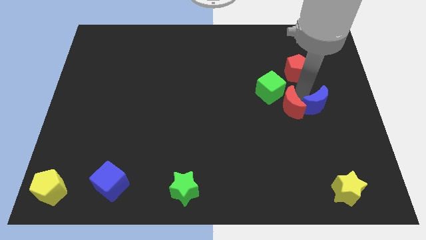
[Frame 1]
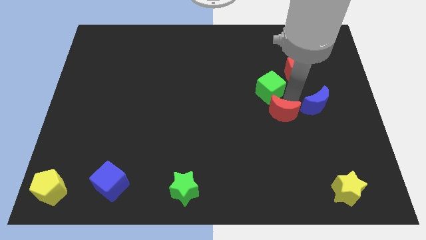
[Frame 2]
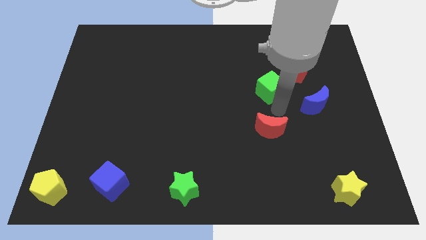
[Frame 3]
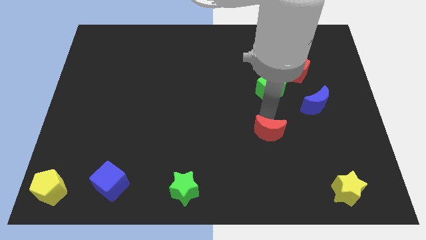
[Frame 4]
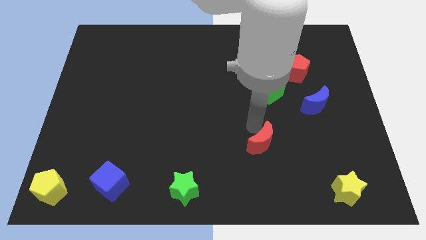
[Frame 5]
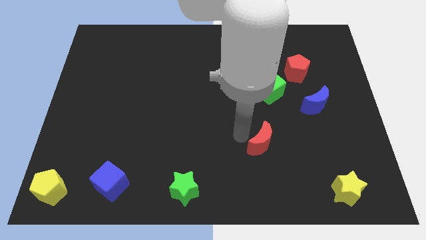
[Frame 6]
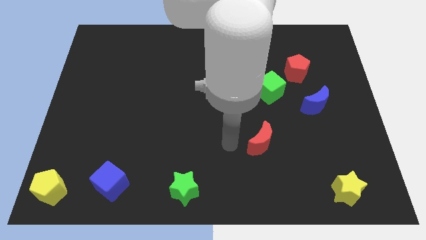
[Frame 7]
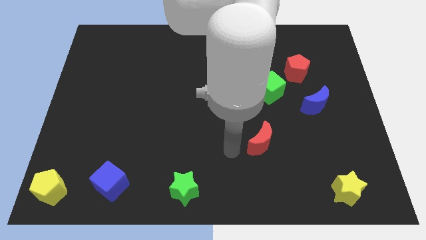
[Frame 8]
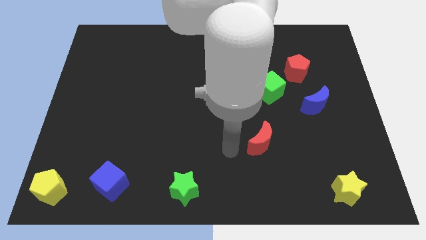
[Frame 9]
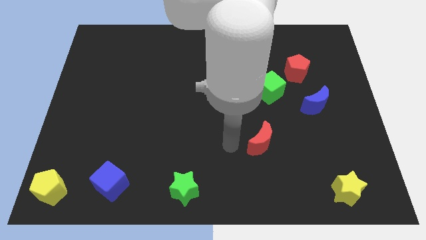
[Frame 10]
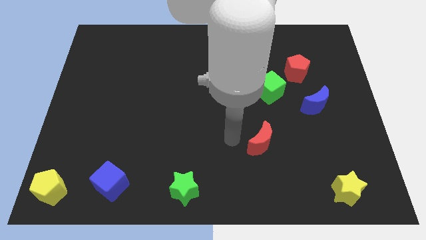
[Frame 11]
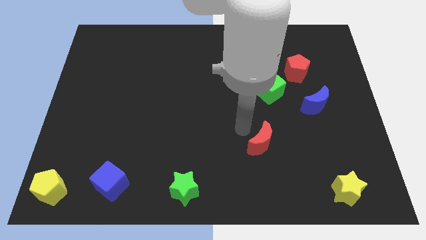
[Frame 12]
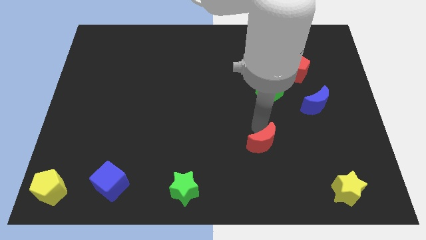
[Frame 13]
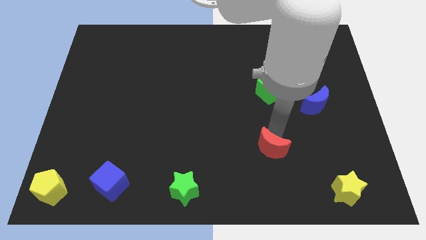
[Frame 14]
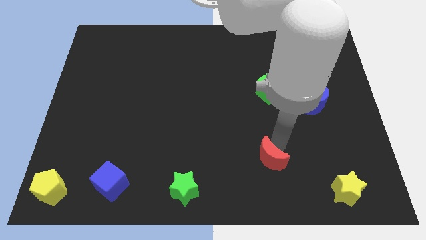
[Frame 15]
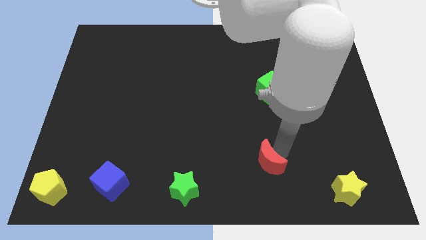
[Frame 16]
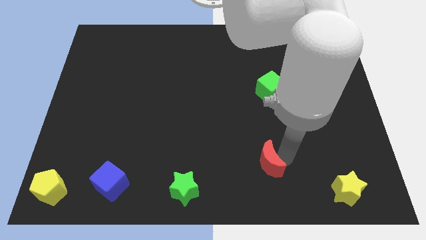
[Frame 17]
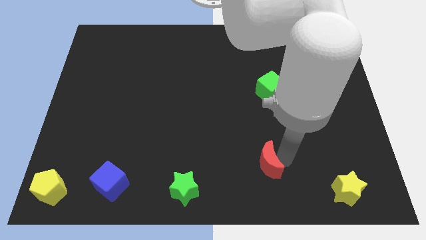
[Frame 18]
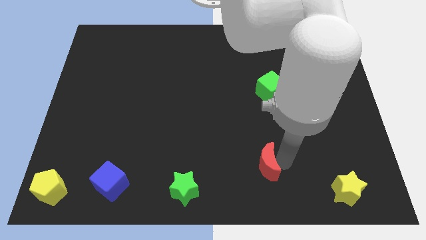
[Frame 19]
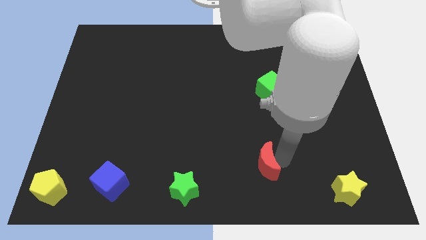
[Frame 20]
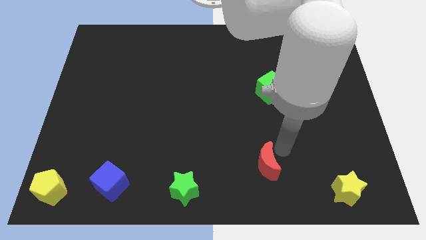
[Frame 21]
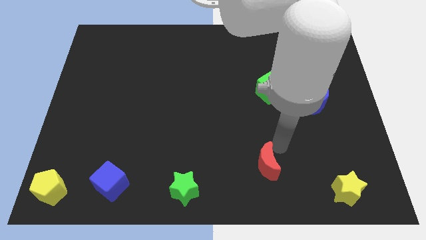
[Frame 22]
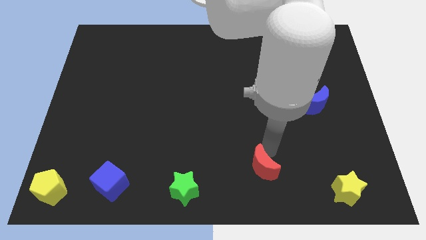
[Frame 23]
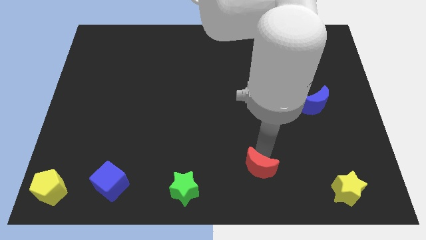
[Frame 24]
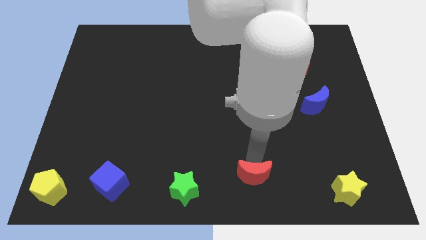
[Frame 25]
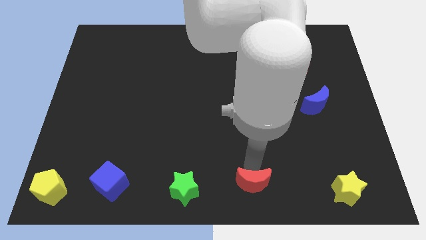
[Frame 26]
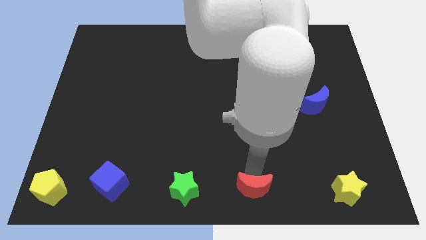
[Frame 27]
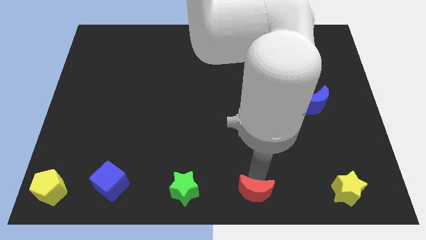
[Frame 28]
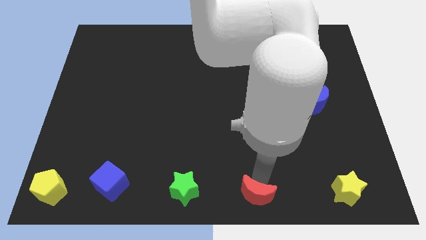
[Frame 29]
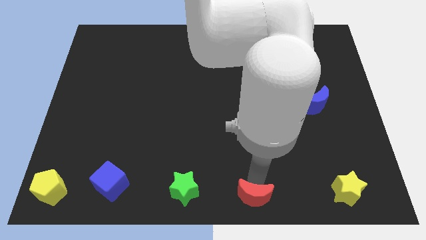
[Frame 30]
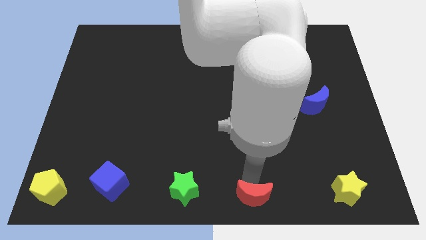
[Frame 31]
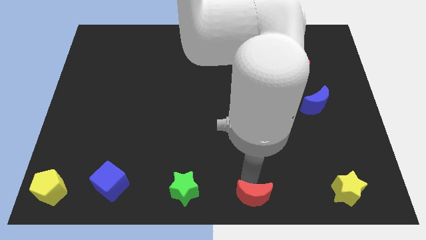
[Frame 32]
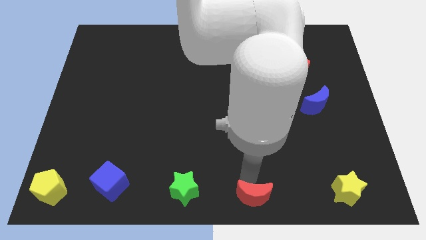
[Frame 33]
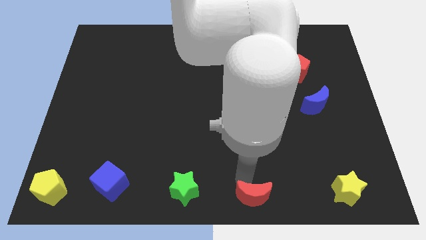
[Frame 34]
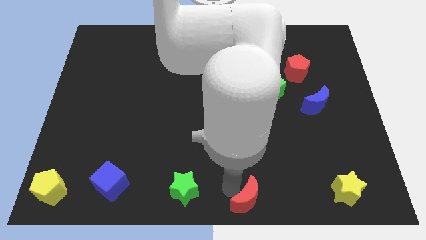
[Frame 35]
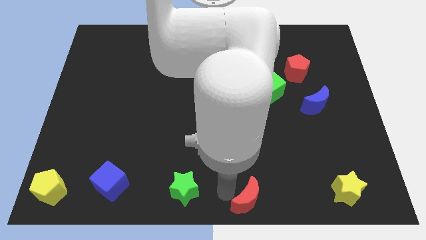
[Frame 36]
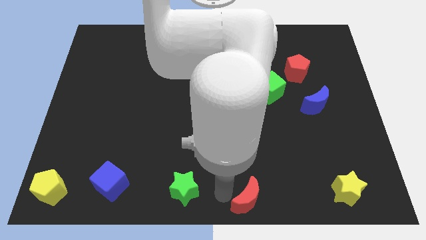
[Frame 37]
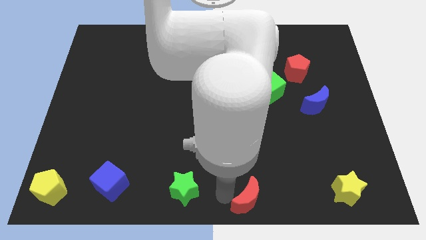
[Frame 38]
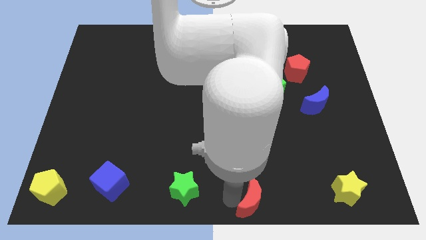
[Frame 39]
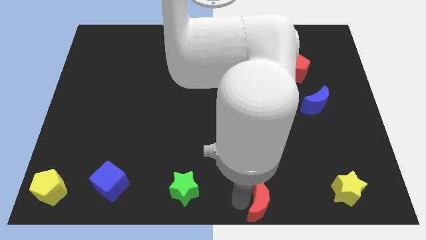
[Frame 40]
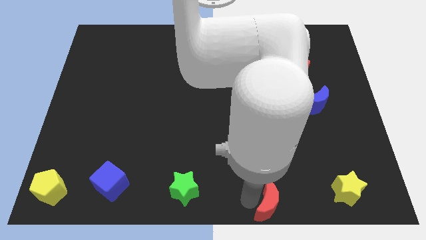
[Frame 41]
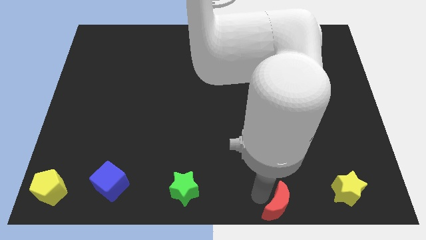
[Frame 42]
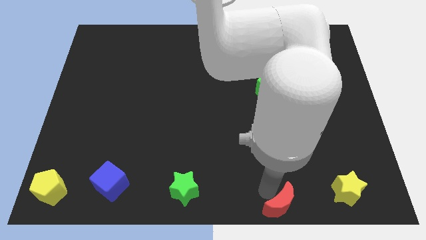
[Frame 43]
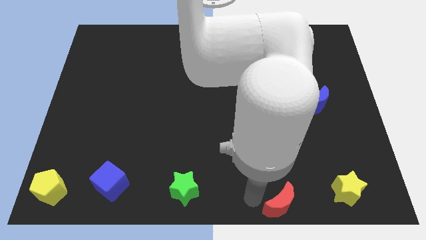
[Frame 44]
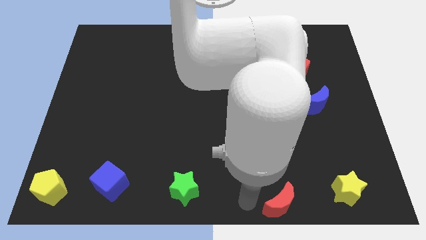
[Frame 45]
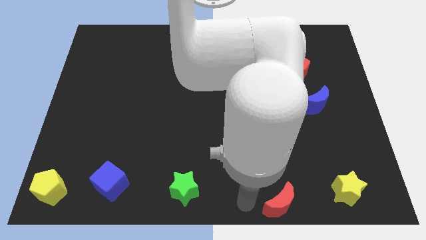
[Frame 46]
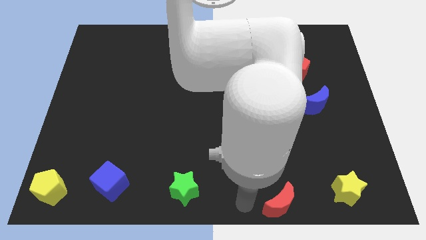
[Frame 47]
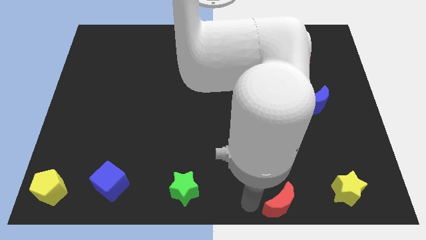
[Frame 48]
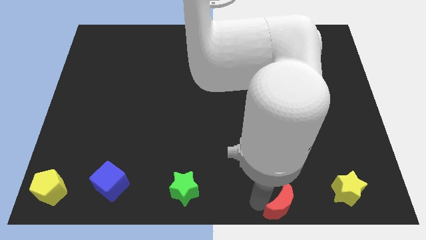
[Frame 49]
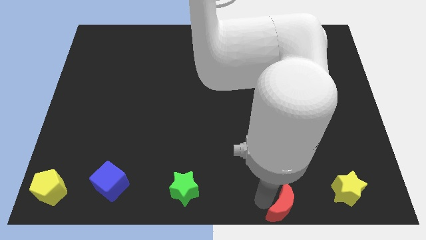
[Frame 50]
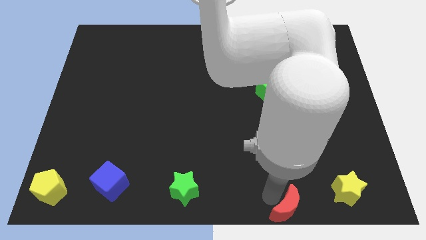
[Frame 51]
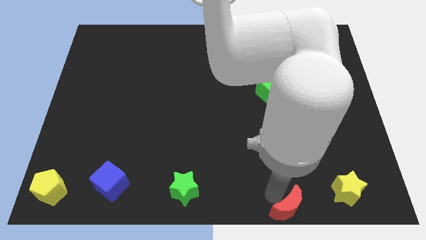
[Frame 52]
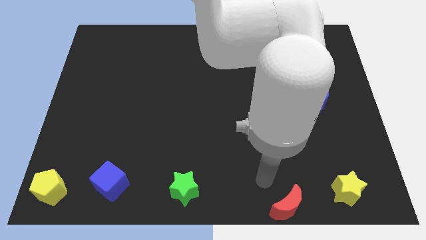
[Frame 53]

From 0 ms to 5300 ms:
move the red crescent away from the left side of the blue crescent

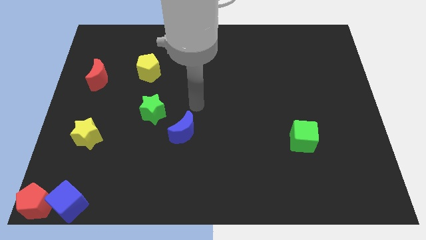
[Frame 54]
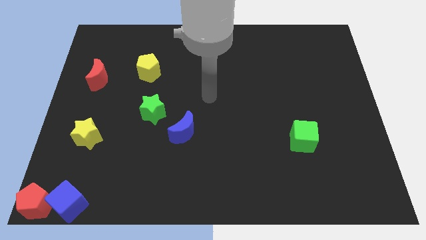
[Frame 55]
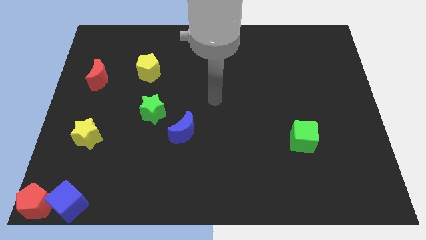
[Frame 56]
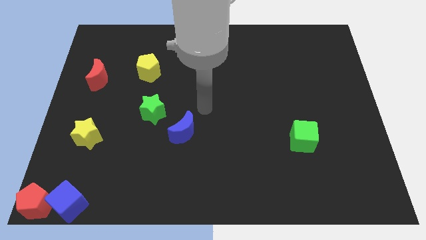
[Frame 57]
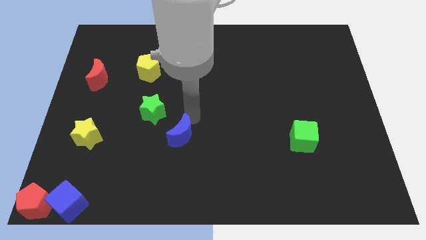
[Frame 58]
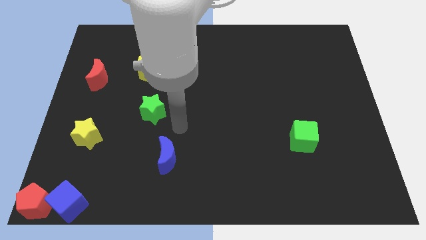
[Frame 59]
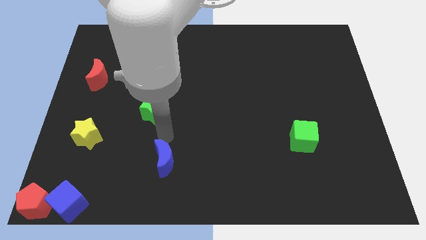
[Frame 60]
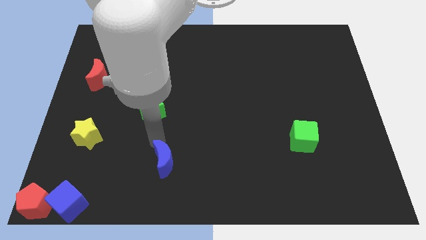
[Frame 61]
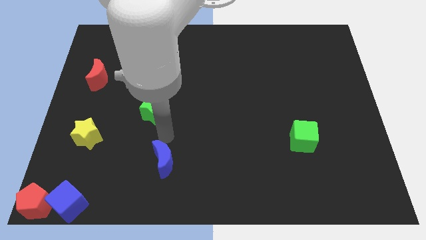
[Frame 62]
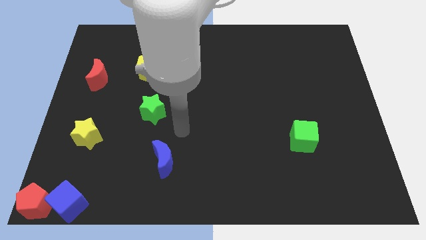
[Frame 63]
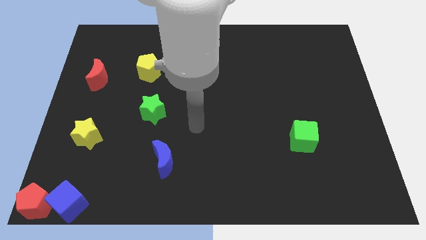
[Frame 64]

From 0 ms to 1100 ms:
place the blue moon right to the yellow star

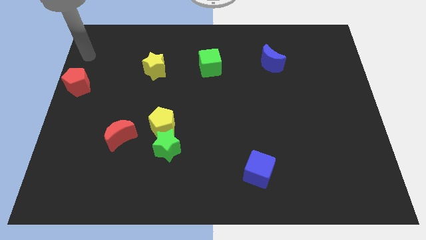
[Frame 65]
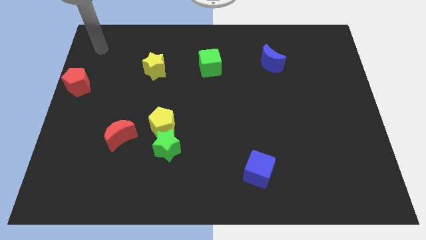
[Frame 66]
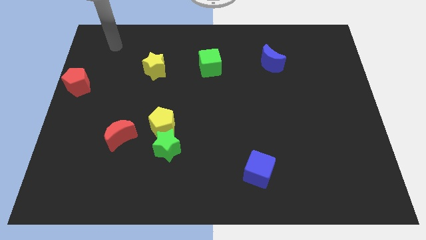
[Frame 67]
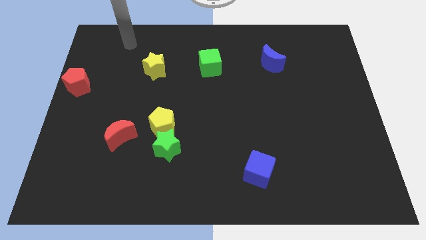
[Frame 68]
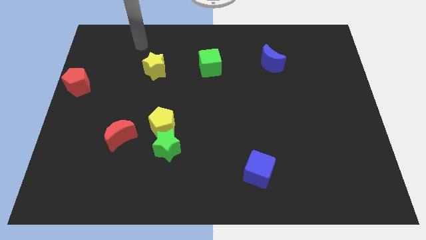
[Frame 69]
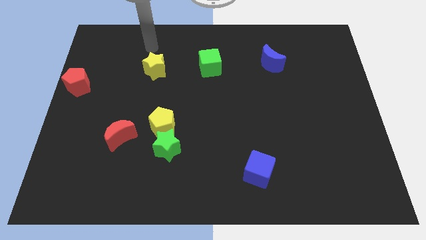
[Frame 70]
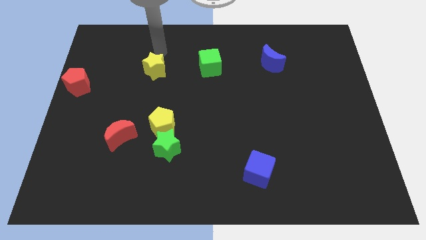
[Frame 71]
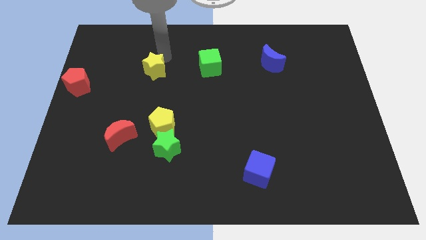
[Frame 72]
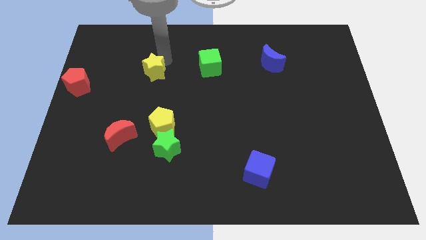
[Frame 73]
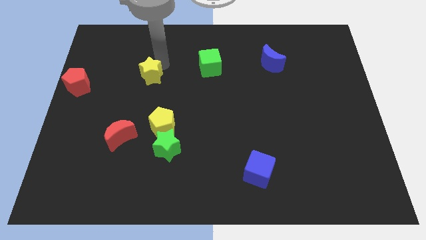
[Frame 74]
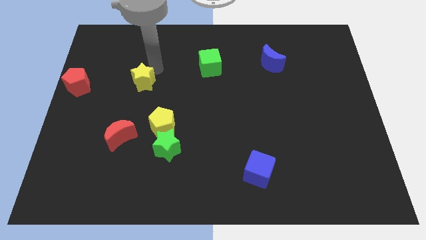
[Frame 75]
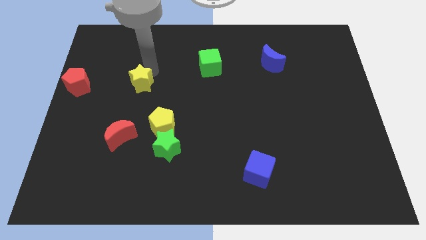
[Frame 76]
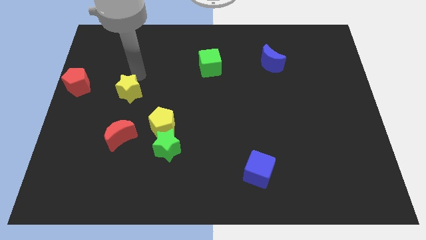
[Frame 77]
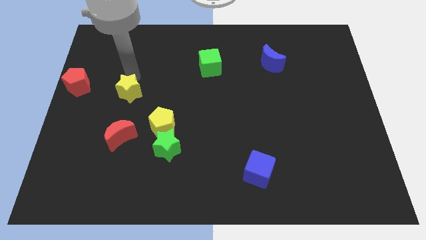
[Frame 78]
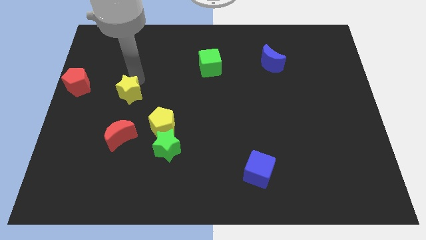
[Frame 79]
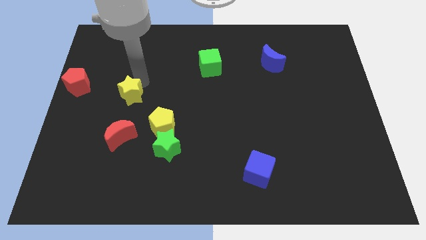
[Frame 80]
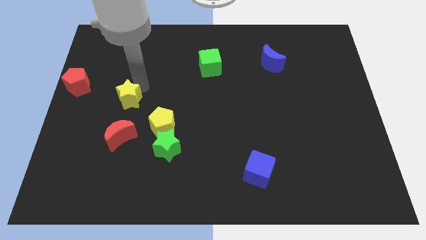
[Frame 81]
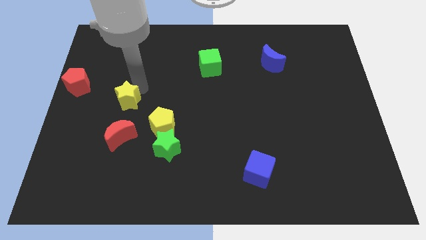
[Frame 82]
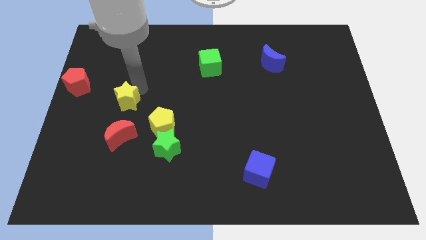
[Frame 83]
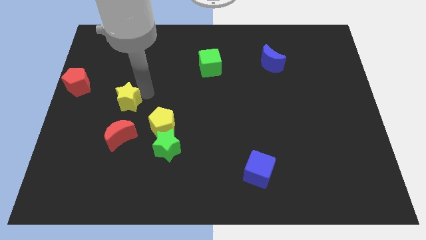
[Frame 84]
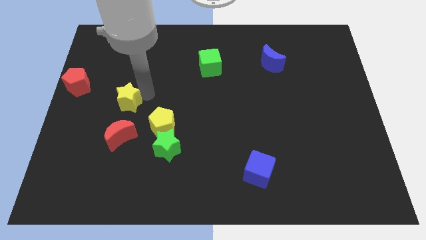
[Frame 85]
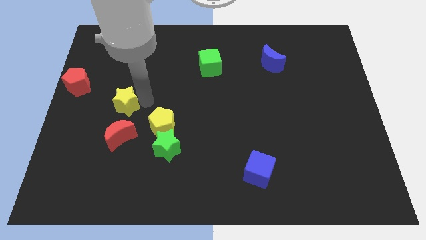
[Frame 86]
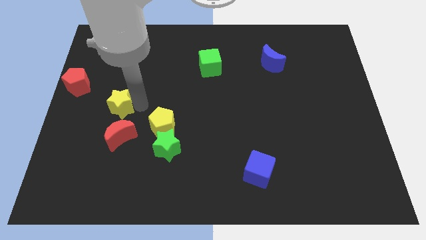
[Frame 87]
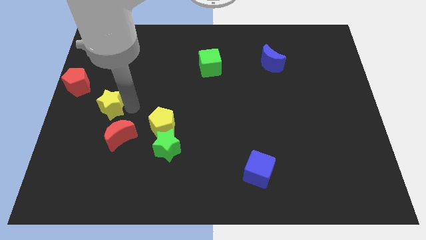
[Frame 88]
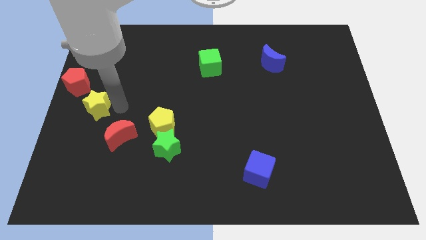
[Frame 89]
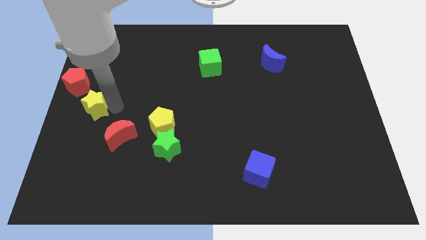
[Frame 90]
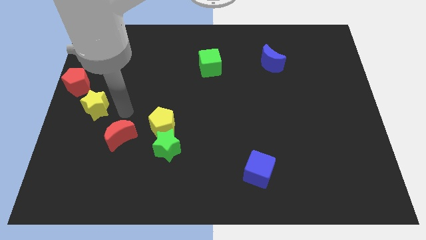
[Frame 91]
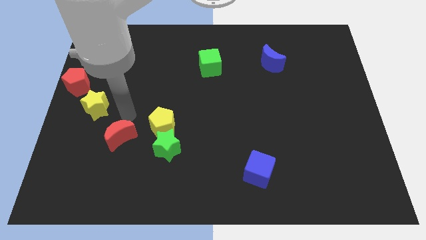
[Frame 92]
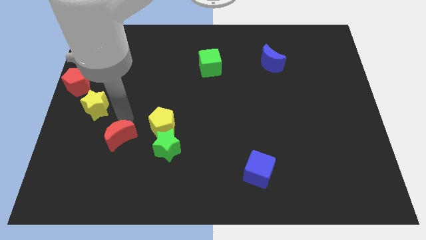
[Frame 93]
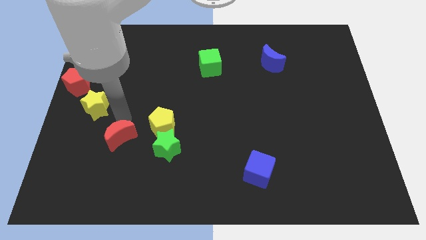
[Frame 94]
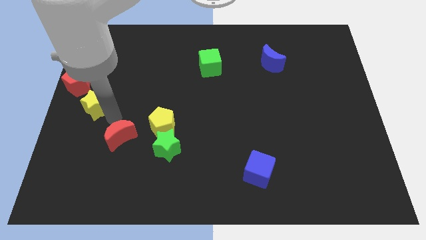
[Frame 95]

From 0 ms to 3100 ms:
move the yellow star in between the red pentagon and red moon
